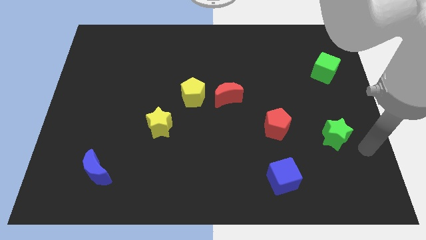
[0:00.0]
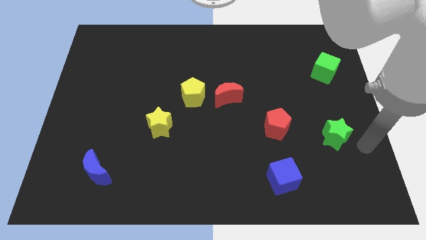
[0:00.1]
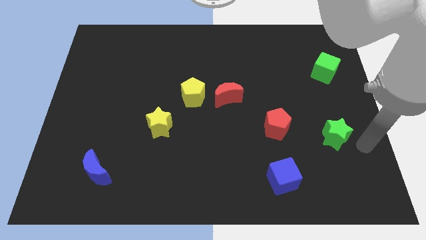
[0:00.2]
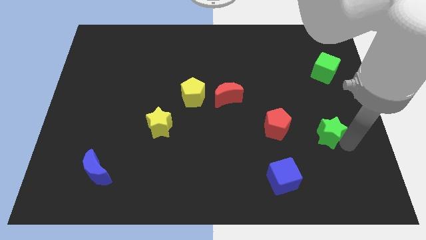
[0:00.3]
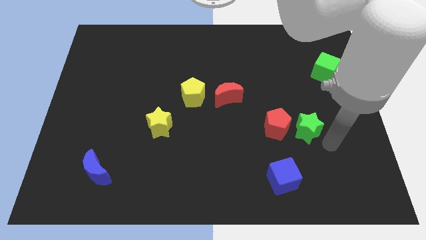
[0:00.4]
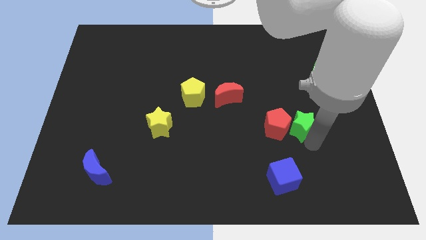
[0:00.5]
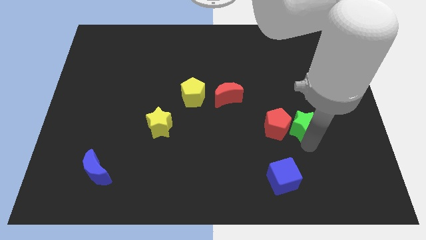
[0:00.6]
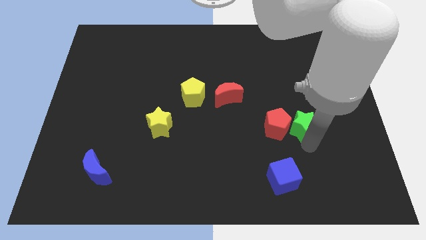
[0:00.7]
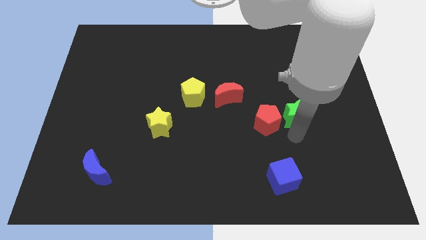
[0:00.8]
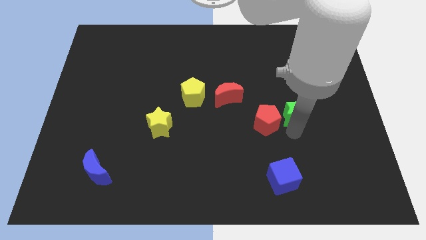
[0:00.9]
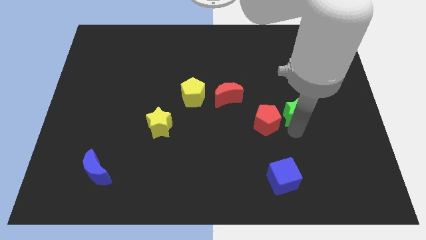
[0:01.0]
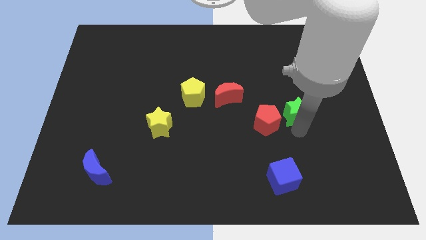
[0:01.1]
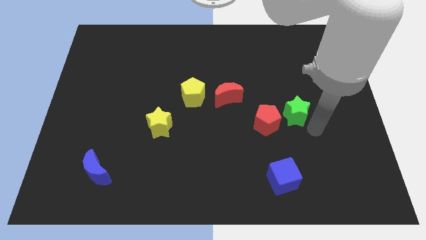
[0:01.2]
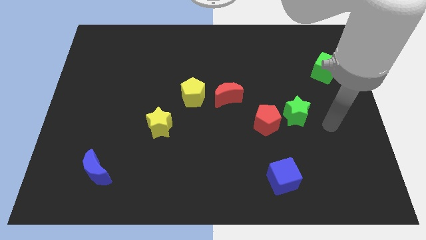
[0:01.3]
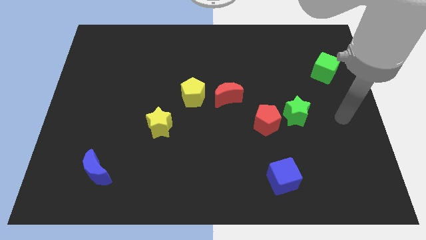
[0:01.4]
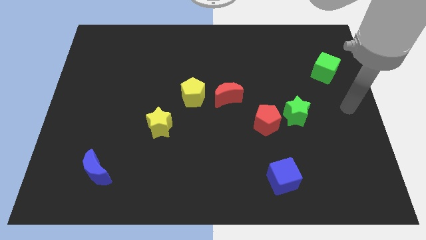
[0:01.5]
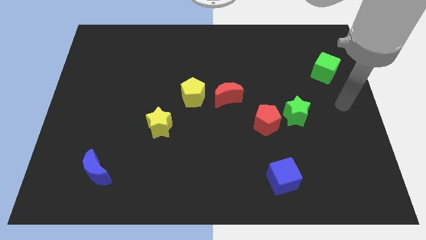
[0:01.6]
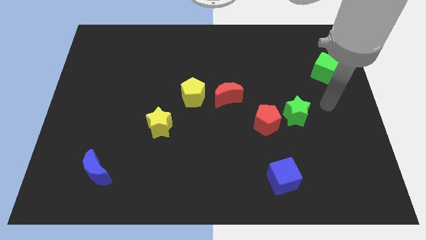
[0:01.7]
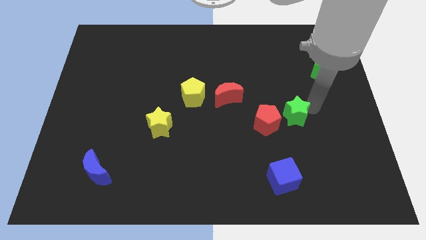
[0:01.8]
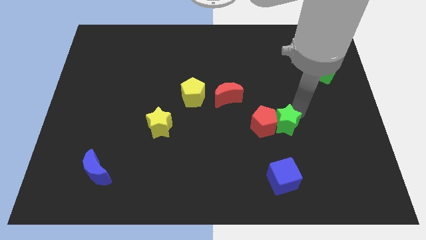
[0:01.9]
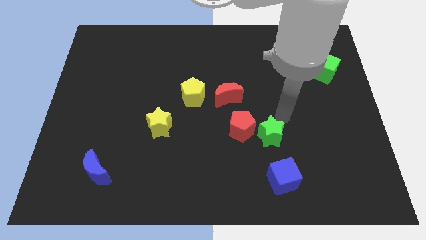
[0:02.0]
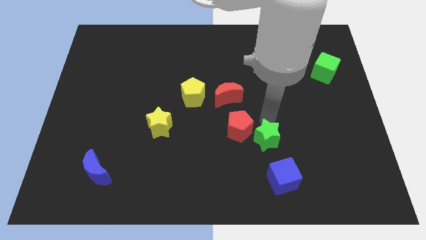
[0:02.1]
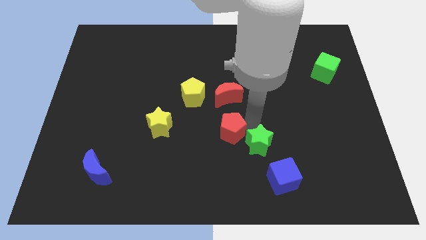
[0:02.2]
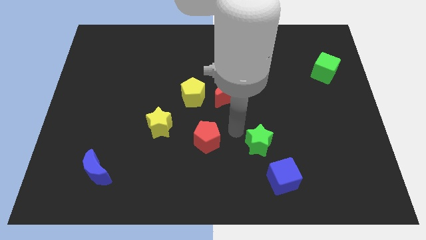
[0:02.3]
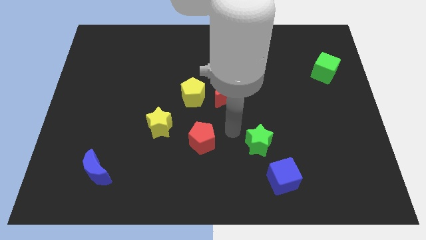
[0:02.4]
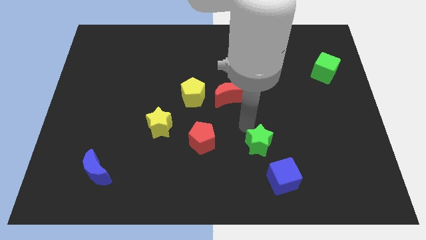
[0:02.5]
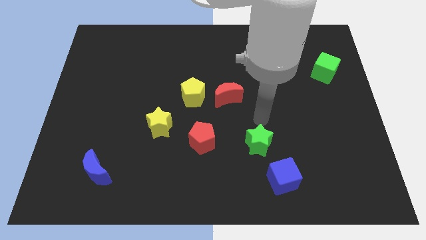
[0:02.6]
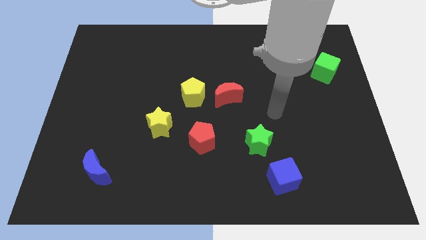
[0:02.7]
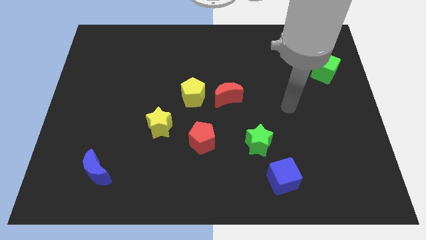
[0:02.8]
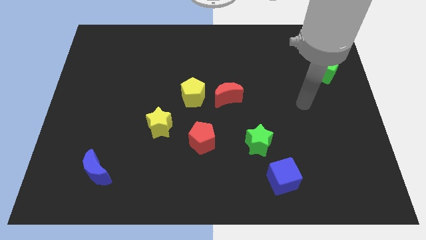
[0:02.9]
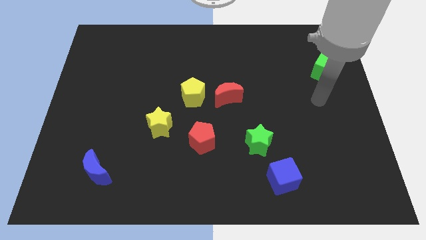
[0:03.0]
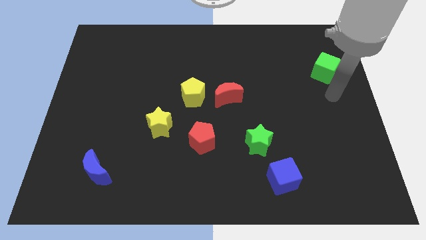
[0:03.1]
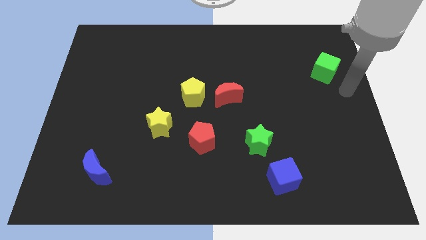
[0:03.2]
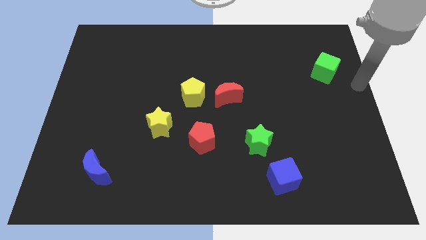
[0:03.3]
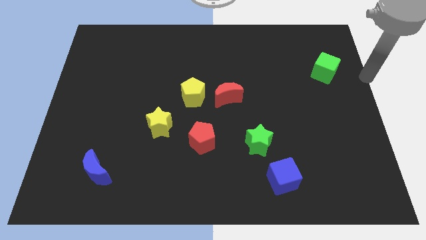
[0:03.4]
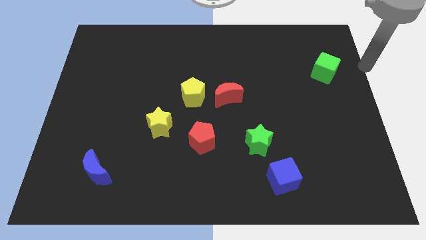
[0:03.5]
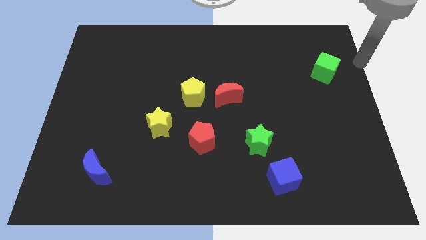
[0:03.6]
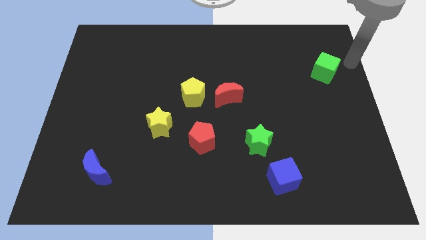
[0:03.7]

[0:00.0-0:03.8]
push the green star and red pentagon towards center

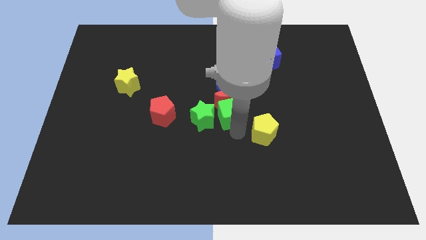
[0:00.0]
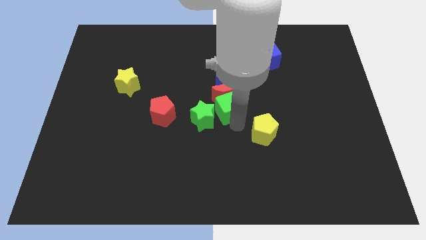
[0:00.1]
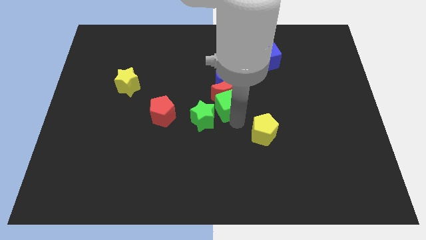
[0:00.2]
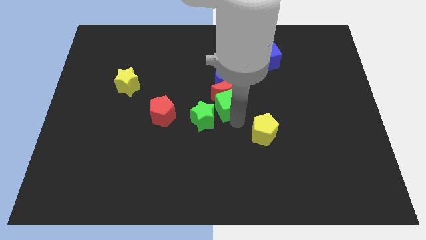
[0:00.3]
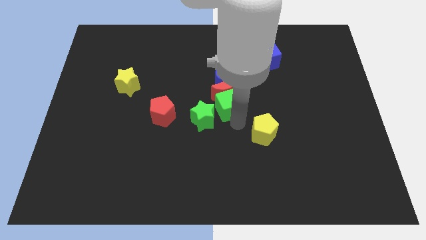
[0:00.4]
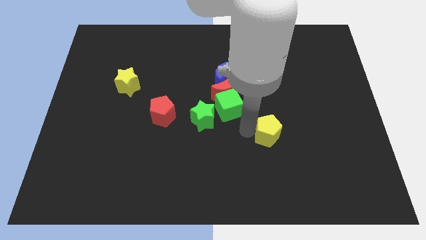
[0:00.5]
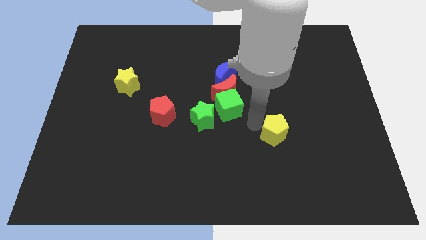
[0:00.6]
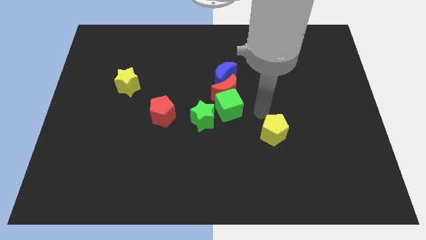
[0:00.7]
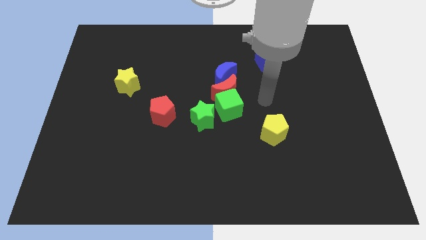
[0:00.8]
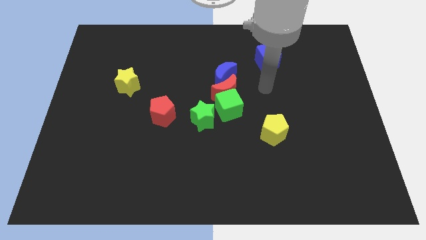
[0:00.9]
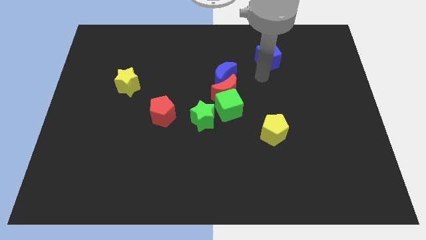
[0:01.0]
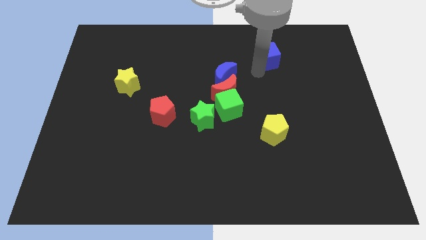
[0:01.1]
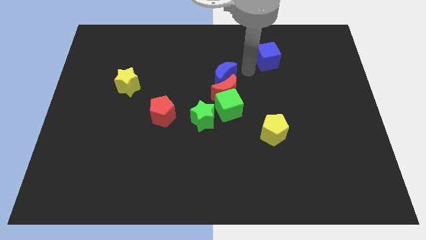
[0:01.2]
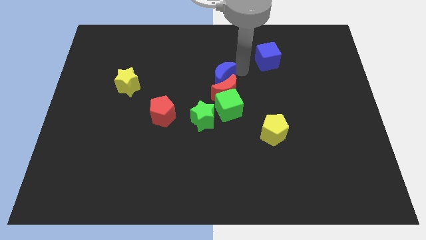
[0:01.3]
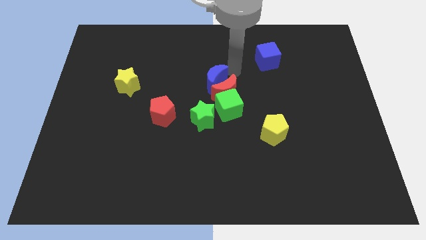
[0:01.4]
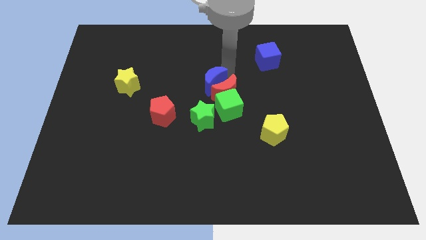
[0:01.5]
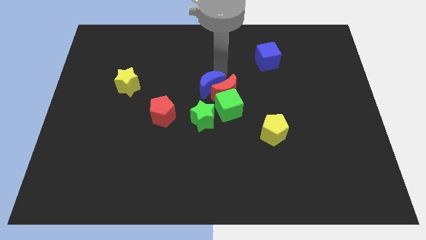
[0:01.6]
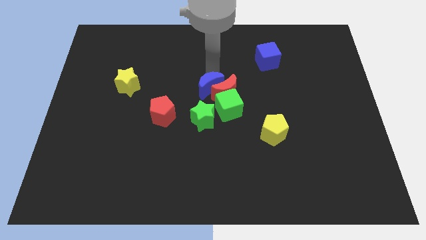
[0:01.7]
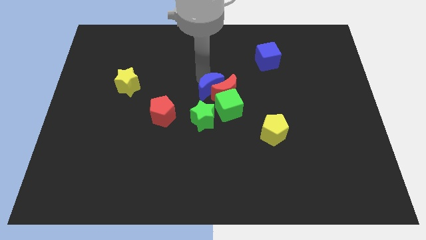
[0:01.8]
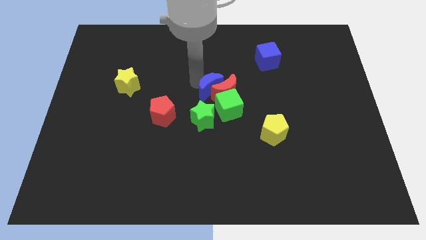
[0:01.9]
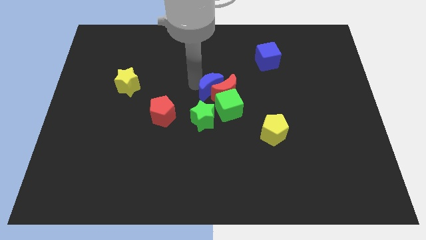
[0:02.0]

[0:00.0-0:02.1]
slightly move the blue moon to the left

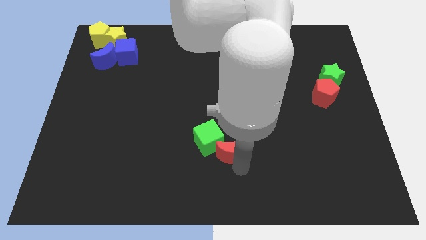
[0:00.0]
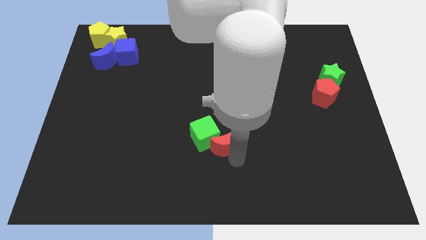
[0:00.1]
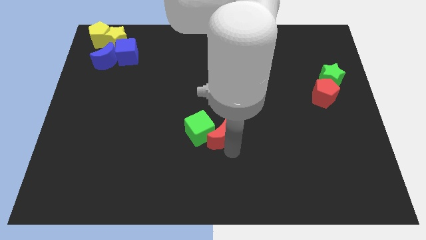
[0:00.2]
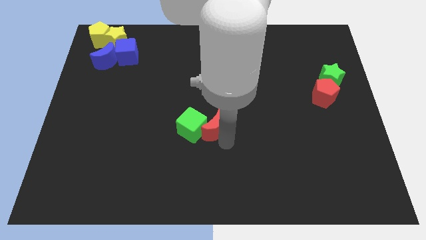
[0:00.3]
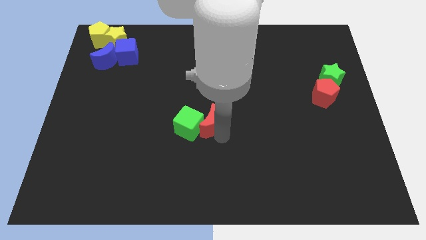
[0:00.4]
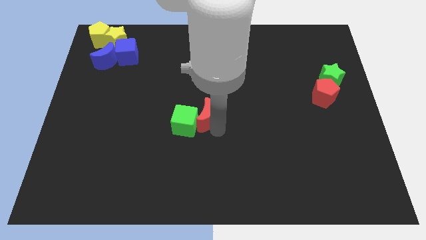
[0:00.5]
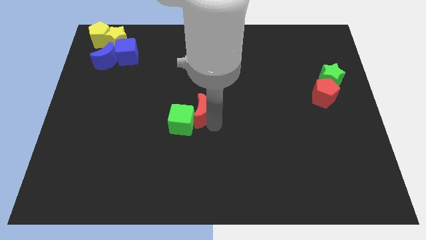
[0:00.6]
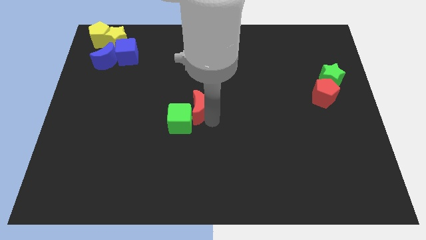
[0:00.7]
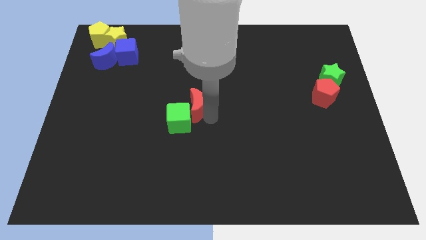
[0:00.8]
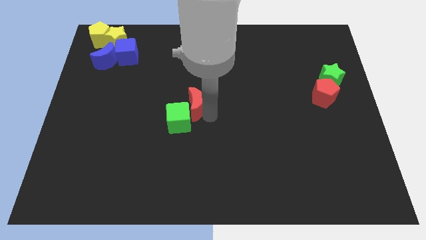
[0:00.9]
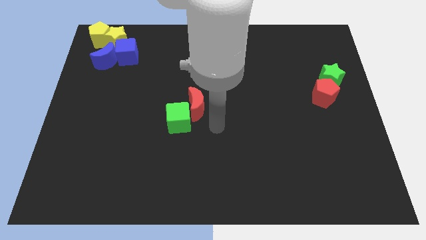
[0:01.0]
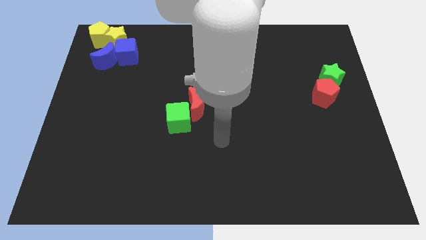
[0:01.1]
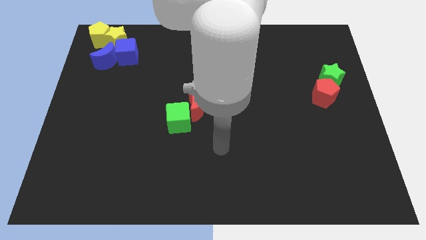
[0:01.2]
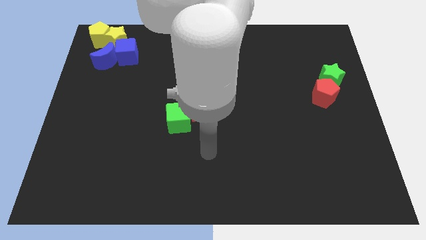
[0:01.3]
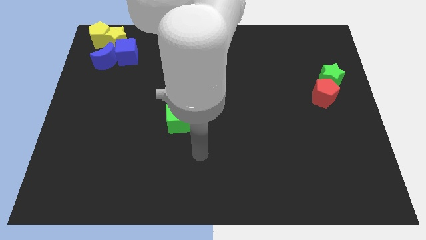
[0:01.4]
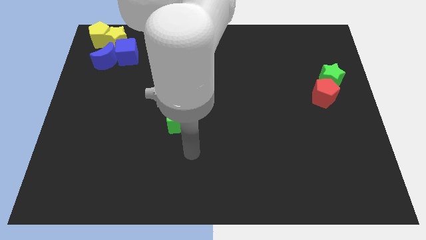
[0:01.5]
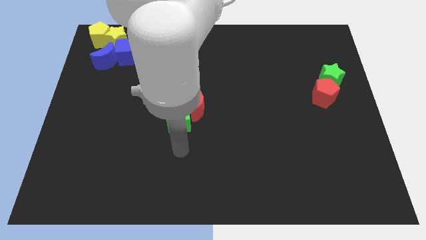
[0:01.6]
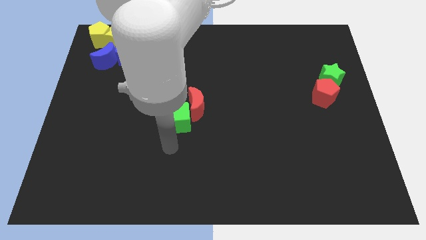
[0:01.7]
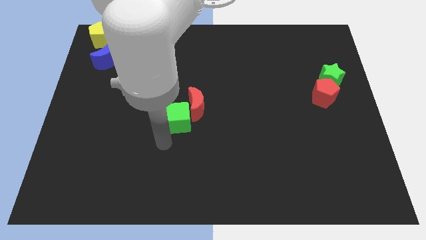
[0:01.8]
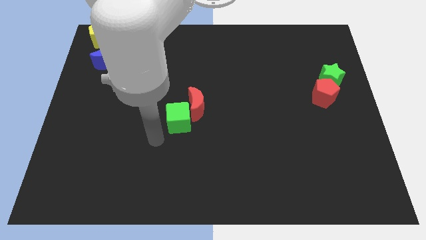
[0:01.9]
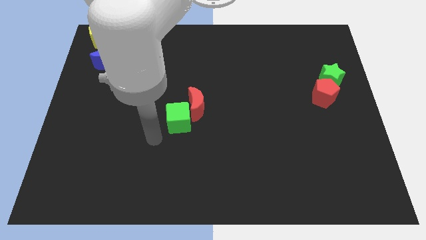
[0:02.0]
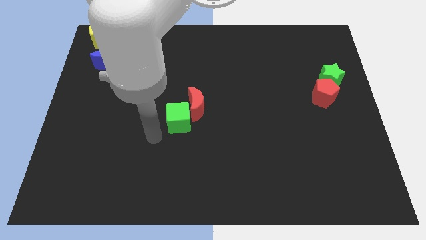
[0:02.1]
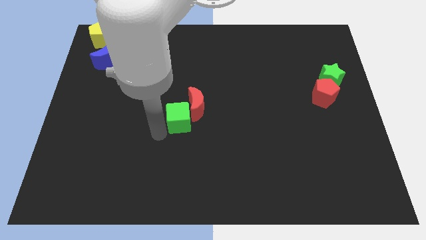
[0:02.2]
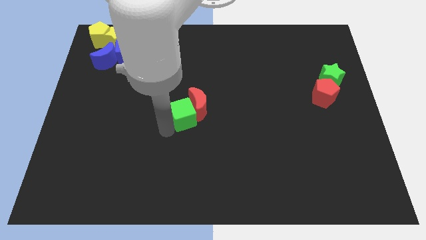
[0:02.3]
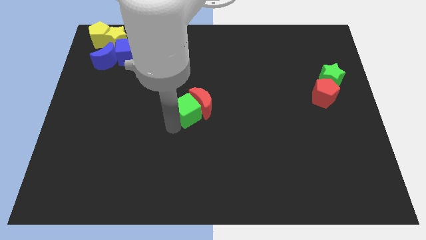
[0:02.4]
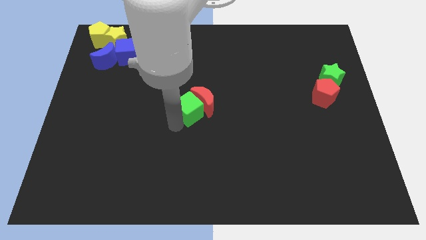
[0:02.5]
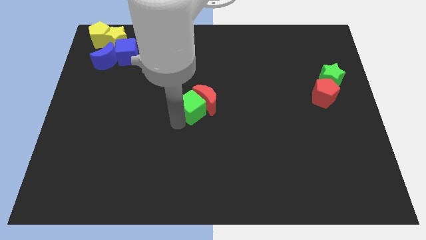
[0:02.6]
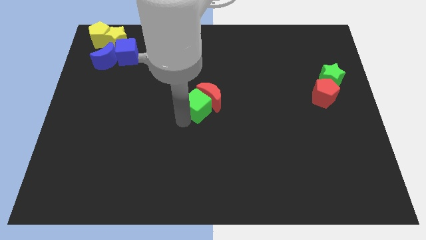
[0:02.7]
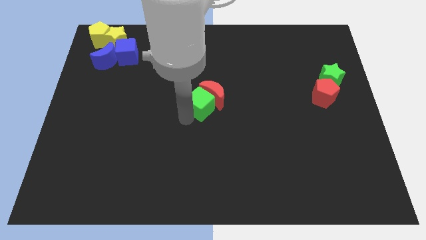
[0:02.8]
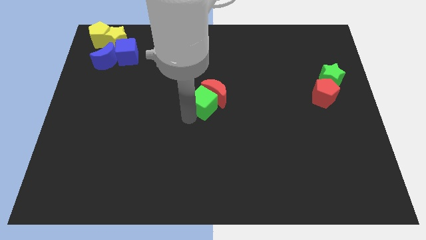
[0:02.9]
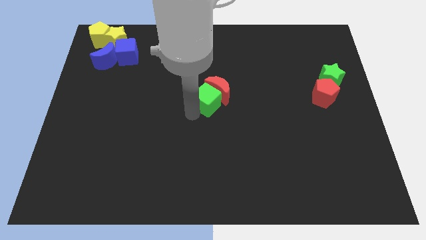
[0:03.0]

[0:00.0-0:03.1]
push red crescent towards upside
